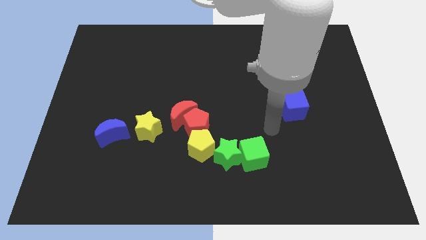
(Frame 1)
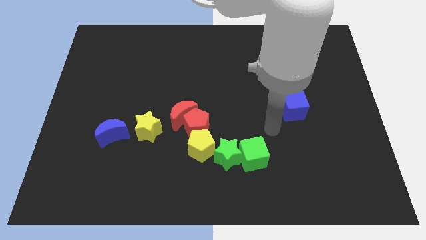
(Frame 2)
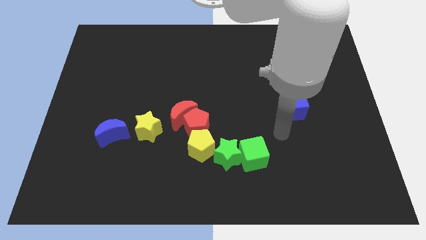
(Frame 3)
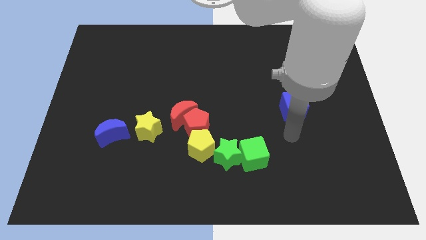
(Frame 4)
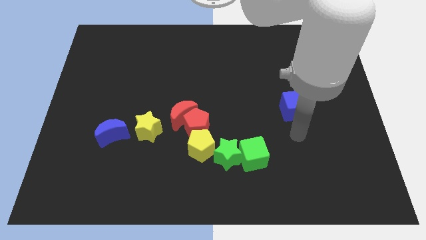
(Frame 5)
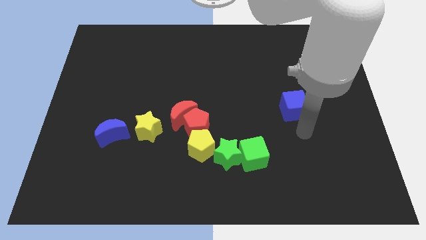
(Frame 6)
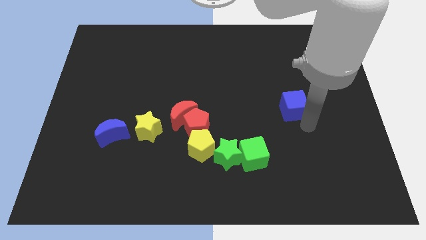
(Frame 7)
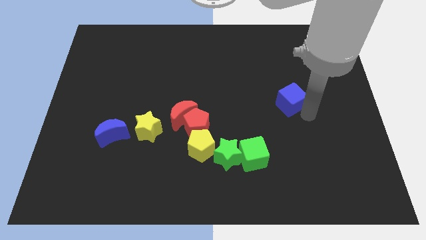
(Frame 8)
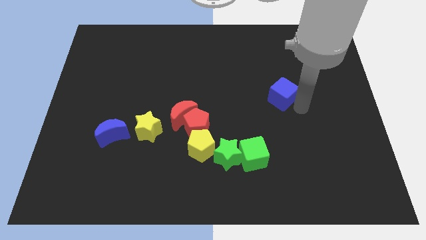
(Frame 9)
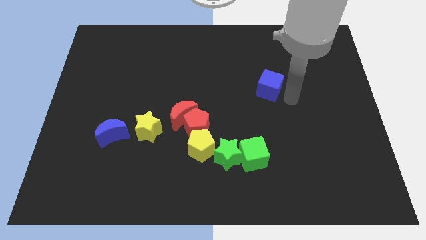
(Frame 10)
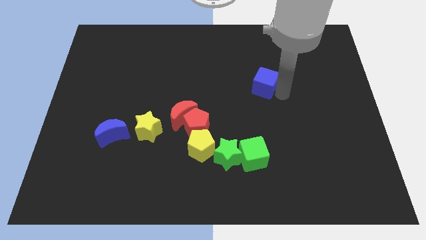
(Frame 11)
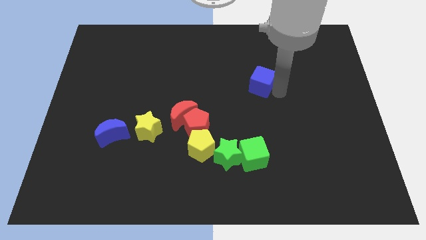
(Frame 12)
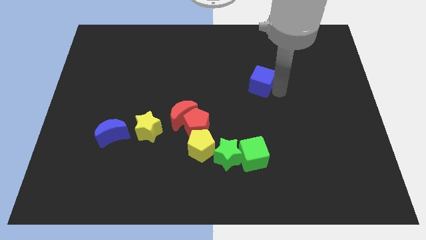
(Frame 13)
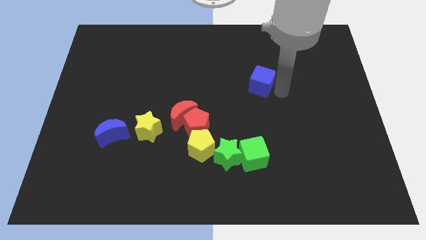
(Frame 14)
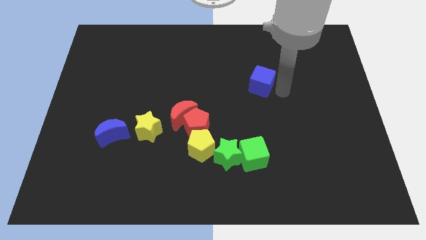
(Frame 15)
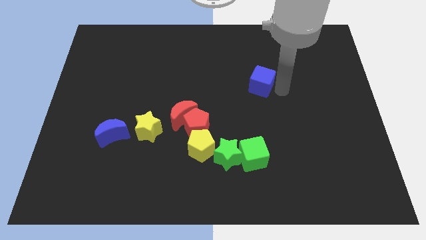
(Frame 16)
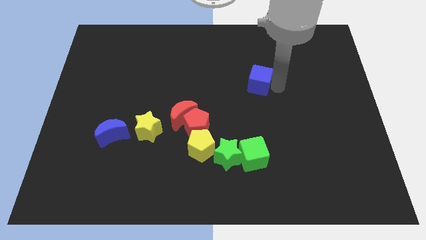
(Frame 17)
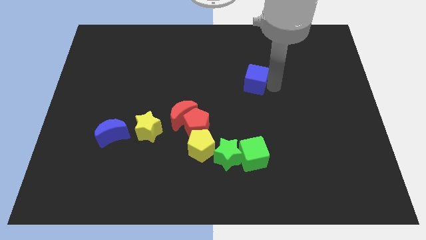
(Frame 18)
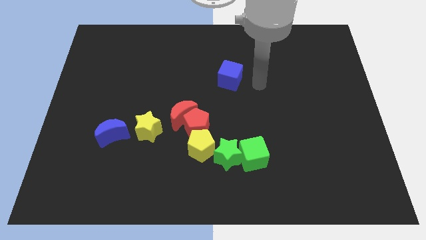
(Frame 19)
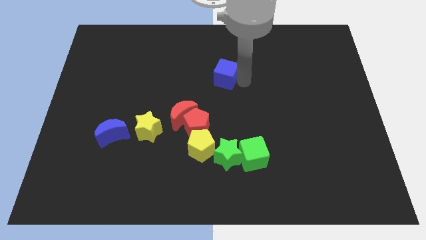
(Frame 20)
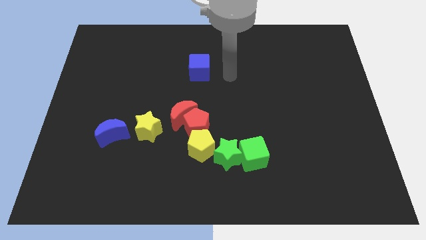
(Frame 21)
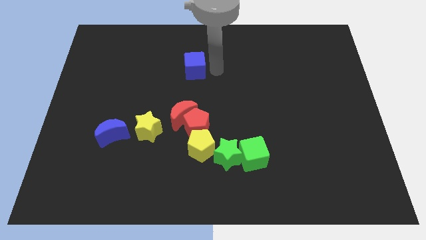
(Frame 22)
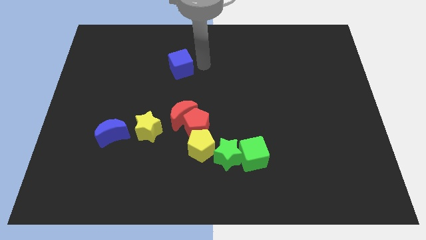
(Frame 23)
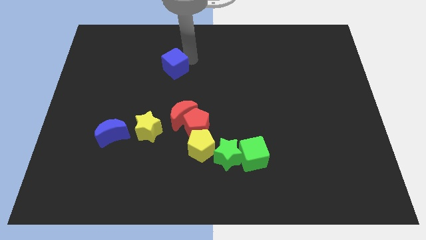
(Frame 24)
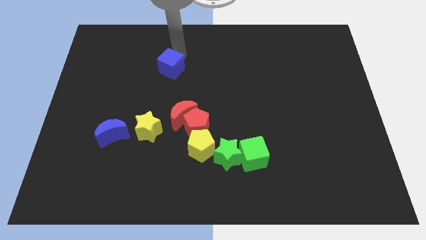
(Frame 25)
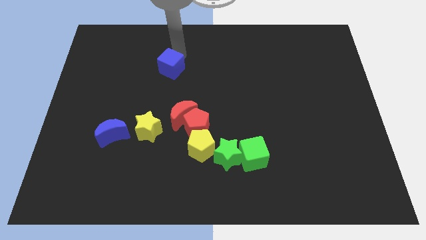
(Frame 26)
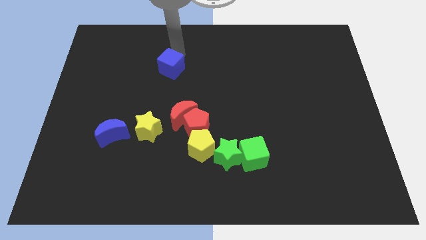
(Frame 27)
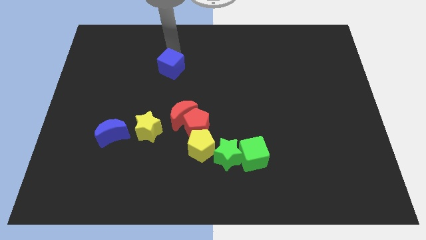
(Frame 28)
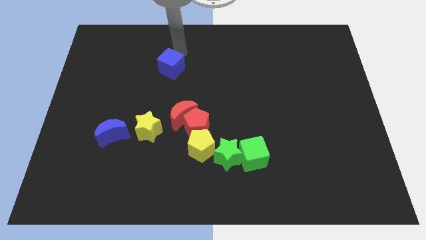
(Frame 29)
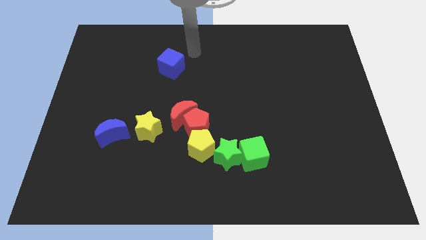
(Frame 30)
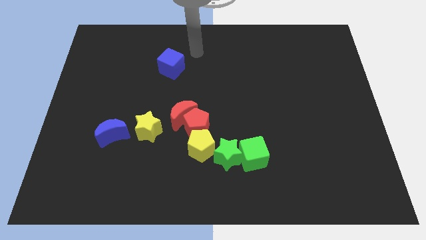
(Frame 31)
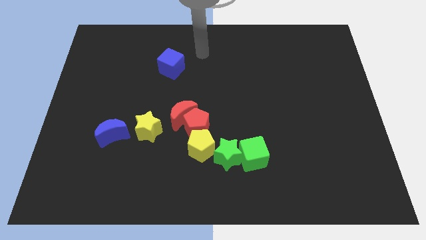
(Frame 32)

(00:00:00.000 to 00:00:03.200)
slide the blue cube above the red crescent

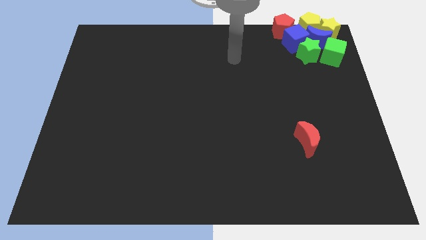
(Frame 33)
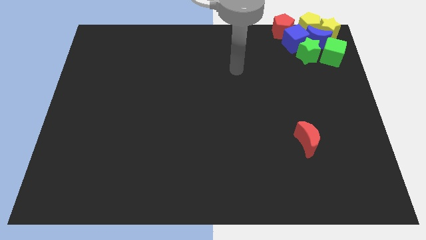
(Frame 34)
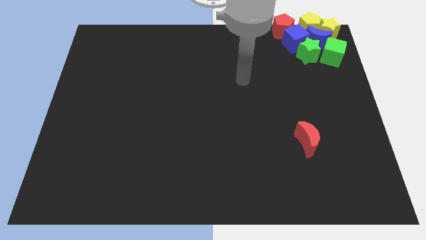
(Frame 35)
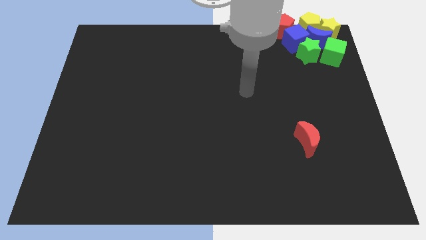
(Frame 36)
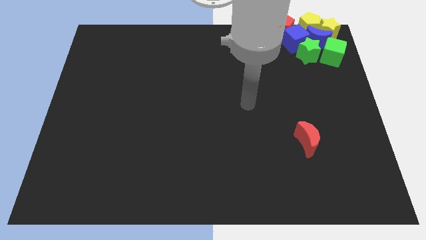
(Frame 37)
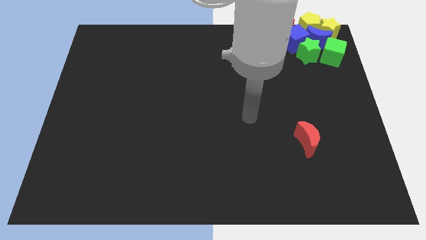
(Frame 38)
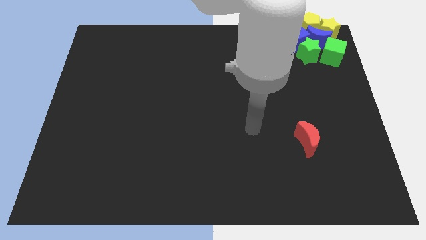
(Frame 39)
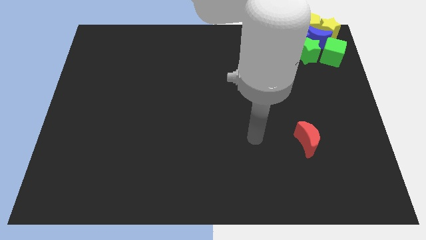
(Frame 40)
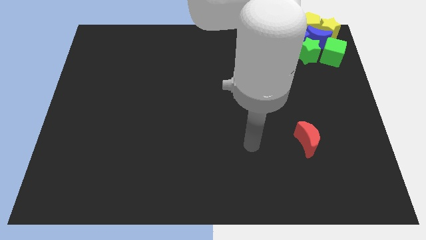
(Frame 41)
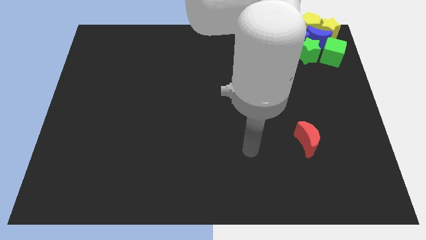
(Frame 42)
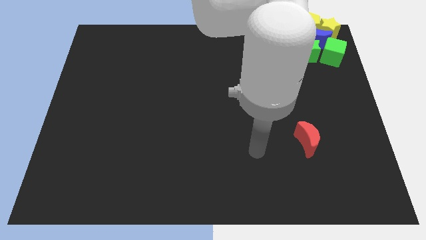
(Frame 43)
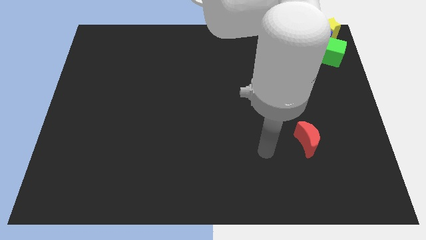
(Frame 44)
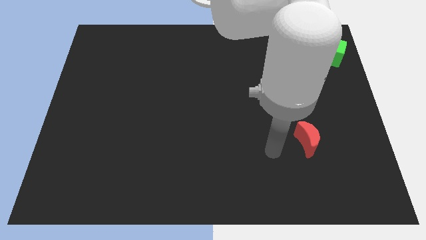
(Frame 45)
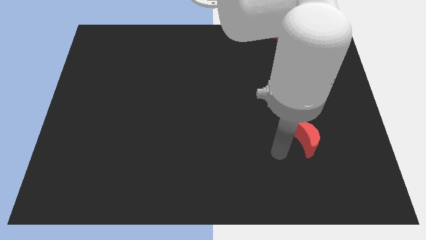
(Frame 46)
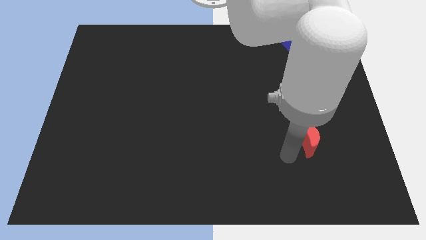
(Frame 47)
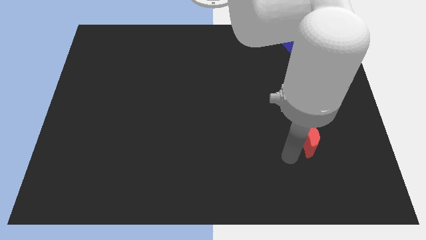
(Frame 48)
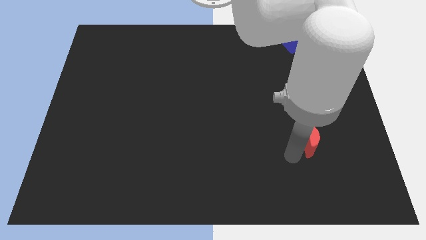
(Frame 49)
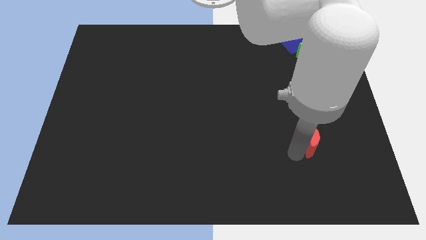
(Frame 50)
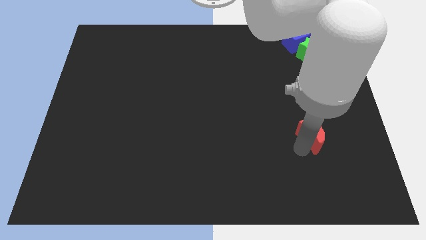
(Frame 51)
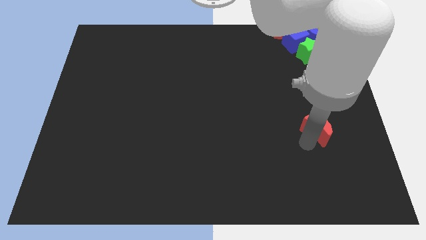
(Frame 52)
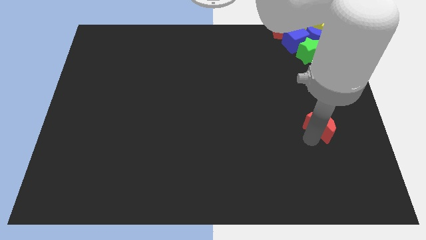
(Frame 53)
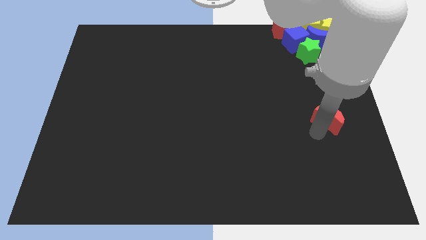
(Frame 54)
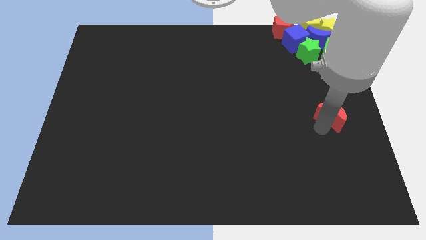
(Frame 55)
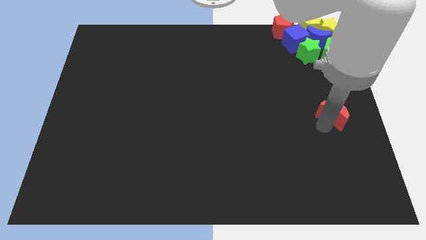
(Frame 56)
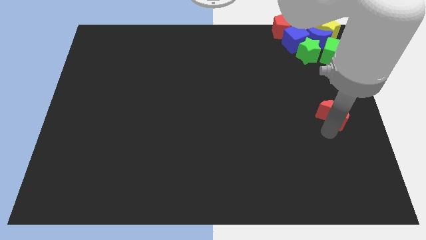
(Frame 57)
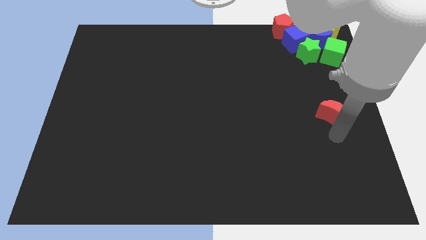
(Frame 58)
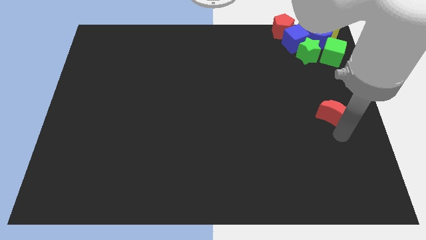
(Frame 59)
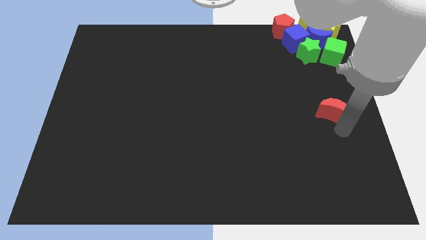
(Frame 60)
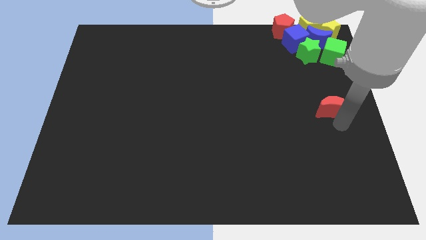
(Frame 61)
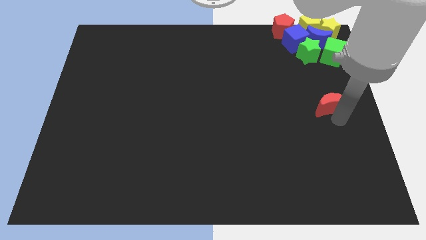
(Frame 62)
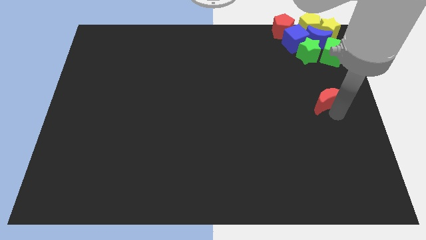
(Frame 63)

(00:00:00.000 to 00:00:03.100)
move red crescent towards the group

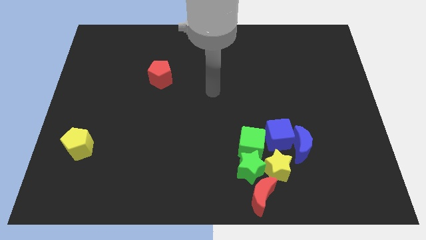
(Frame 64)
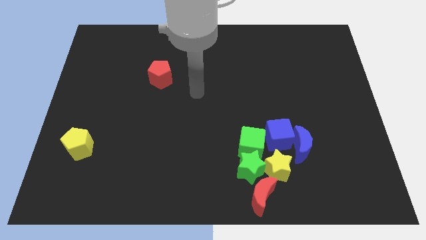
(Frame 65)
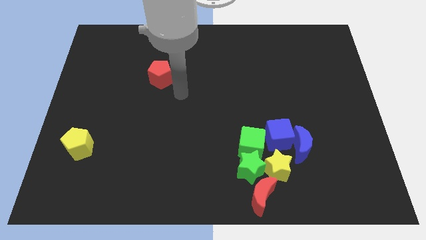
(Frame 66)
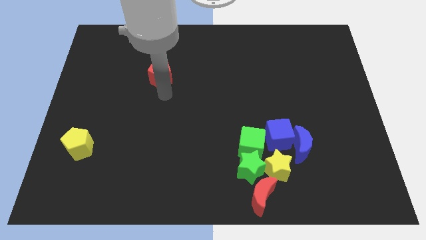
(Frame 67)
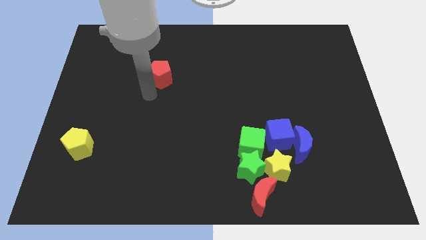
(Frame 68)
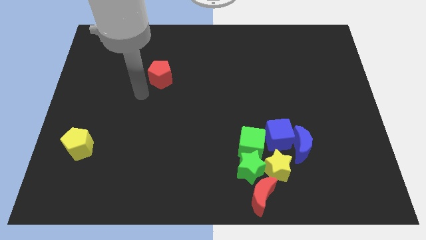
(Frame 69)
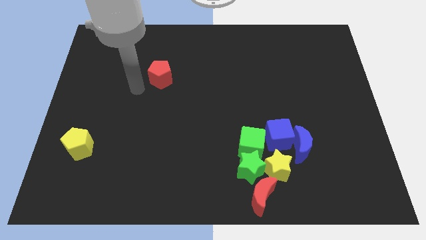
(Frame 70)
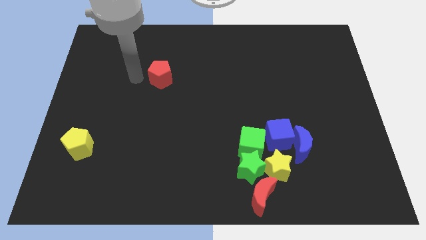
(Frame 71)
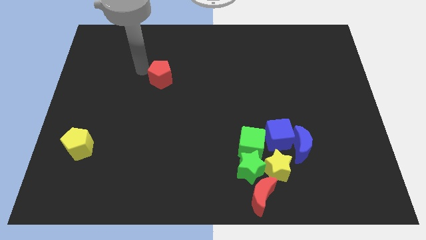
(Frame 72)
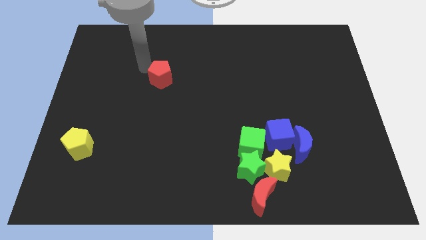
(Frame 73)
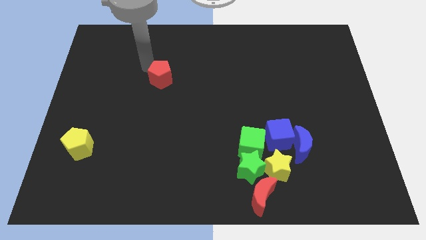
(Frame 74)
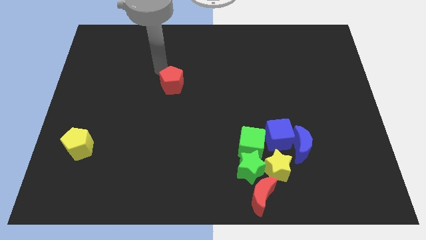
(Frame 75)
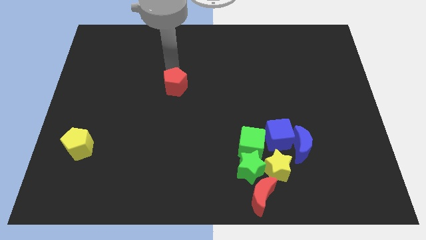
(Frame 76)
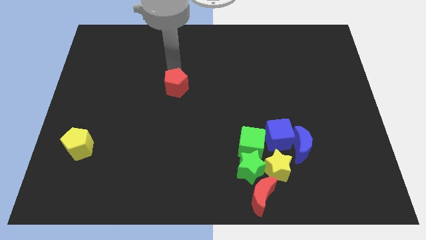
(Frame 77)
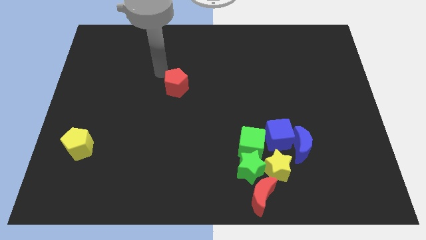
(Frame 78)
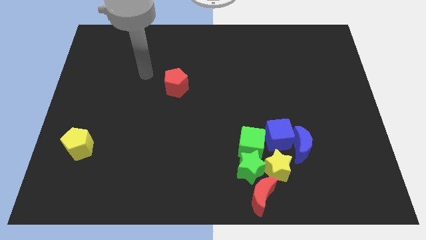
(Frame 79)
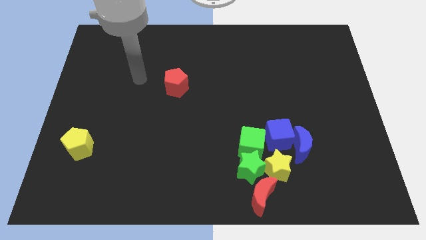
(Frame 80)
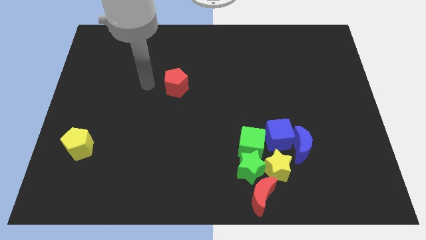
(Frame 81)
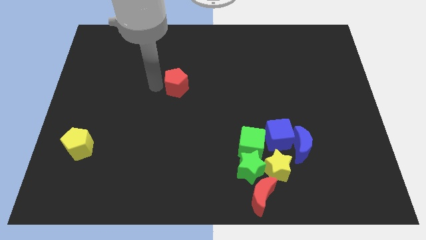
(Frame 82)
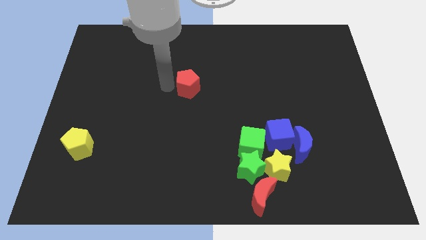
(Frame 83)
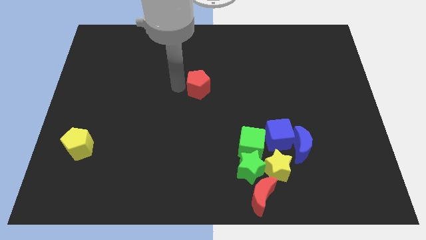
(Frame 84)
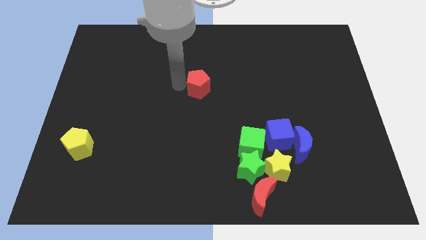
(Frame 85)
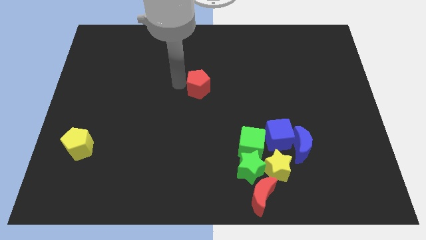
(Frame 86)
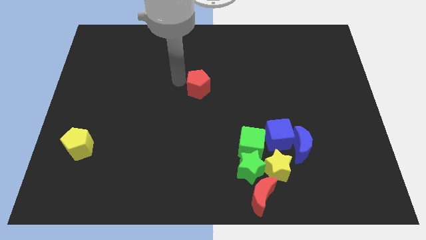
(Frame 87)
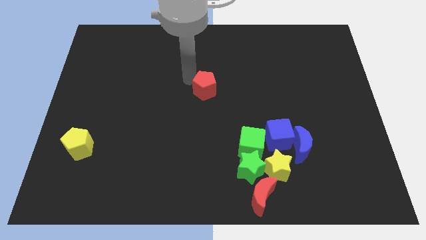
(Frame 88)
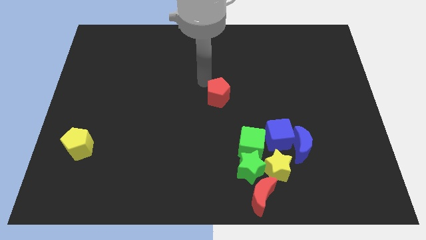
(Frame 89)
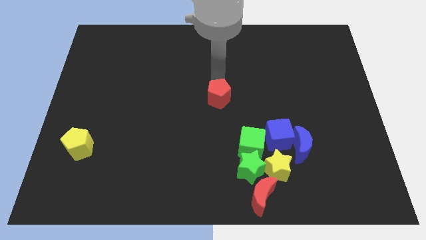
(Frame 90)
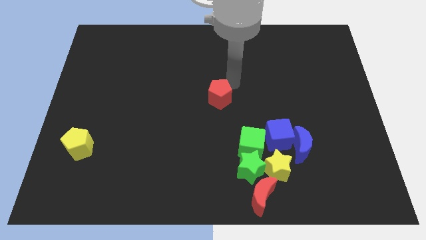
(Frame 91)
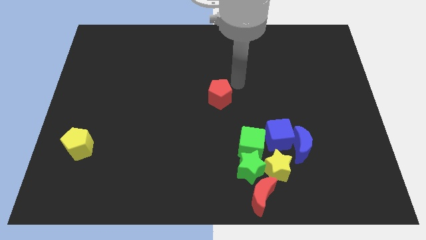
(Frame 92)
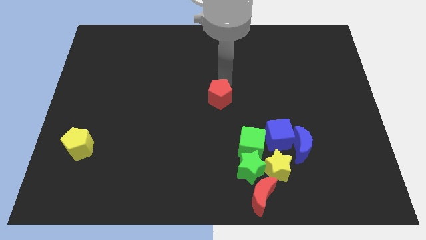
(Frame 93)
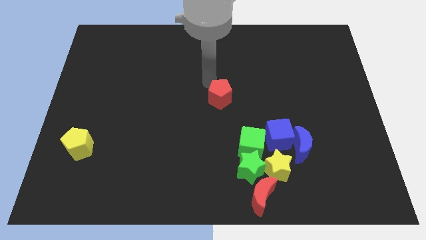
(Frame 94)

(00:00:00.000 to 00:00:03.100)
move red pentagon to the center of the board
